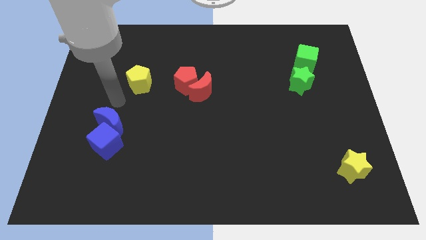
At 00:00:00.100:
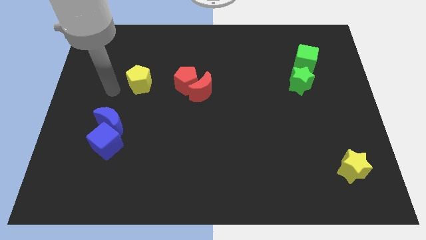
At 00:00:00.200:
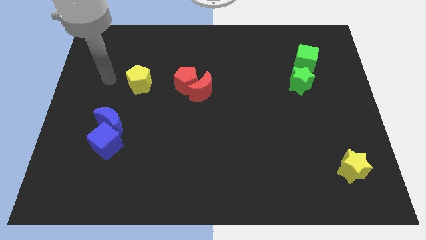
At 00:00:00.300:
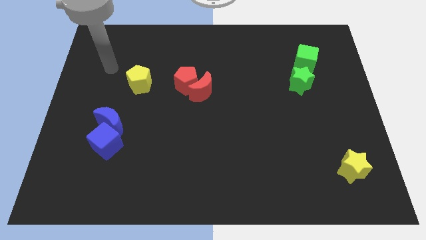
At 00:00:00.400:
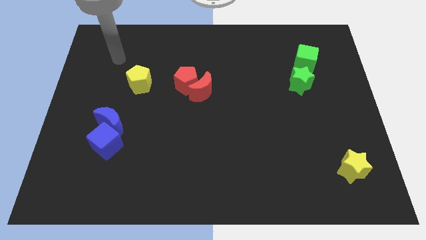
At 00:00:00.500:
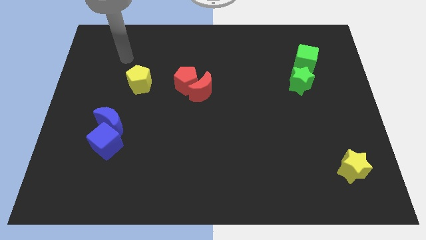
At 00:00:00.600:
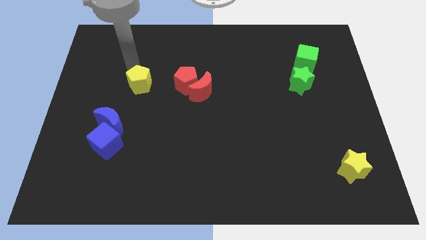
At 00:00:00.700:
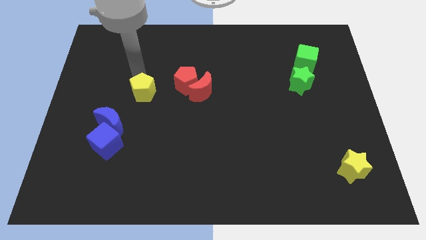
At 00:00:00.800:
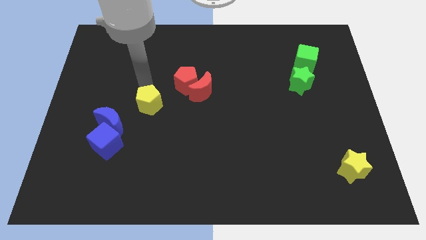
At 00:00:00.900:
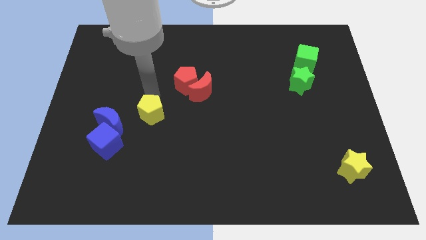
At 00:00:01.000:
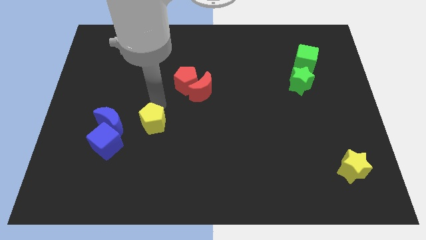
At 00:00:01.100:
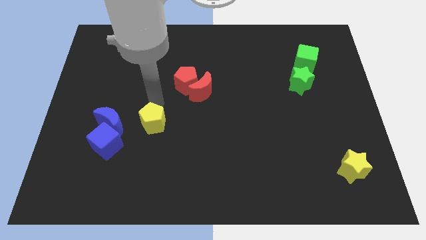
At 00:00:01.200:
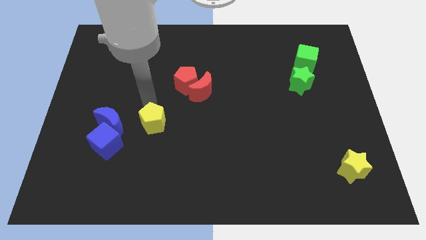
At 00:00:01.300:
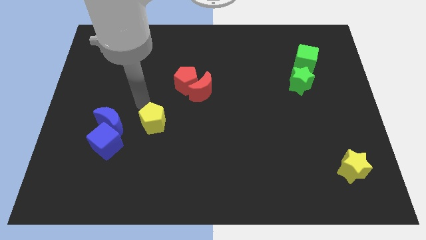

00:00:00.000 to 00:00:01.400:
place the yellow pentagon right to the blue moon

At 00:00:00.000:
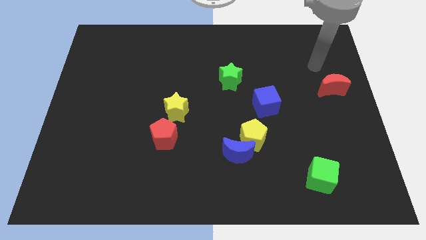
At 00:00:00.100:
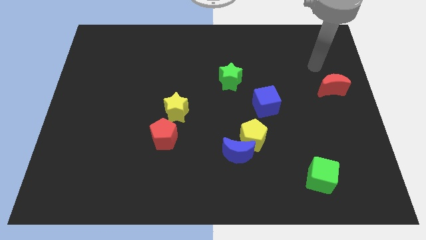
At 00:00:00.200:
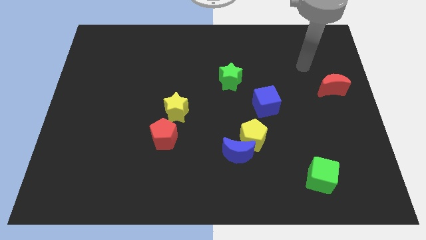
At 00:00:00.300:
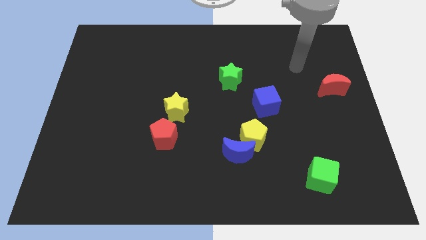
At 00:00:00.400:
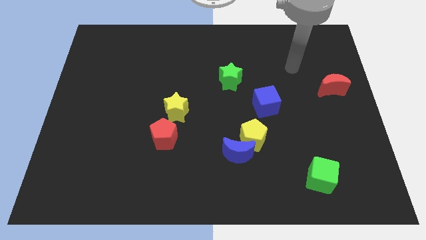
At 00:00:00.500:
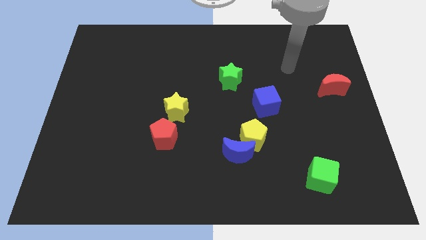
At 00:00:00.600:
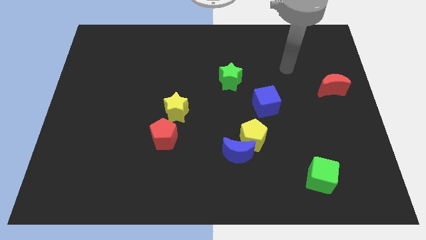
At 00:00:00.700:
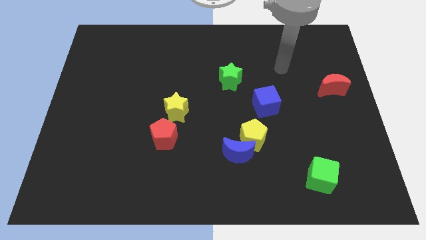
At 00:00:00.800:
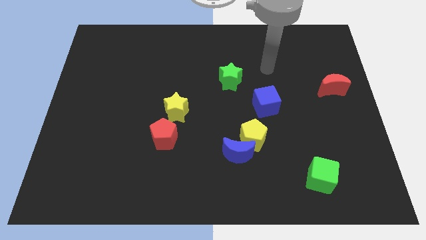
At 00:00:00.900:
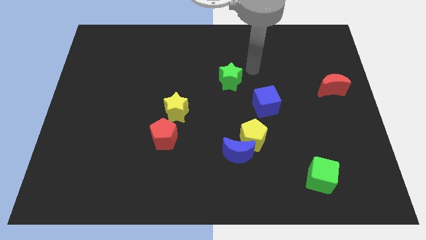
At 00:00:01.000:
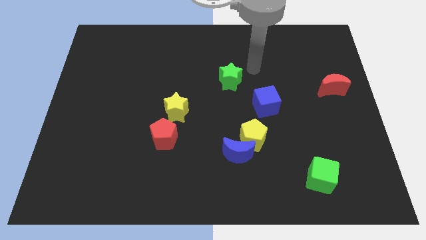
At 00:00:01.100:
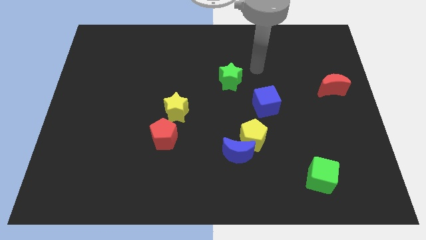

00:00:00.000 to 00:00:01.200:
point your arm to the top right side of the green star

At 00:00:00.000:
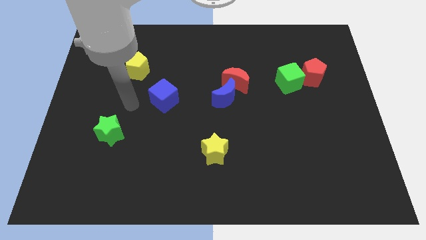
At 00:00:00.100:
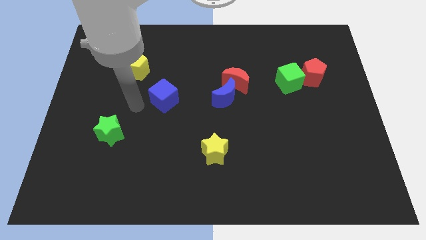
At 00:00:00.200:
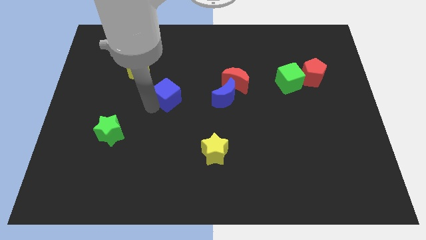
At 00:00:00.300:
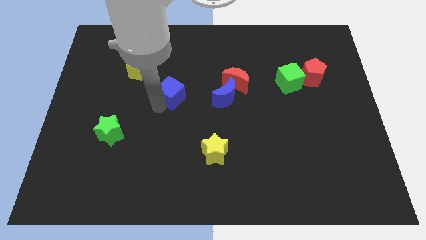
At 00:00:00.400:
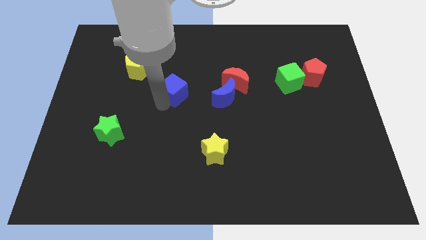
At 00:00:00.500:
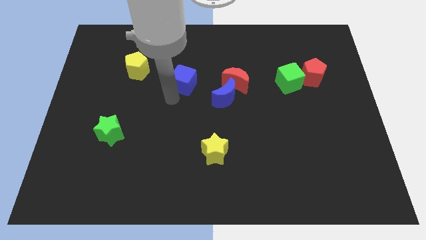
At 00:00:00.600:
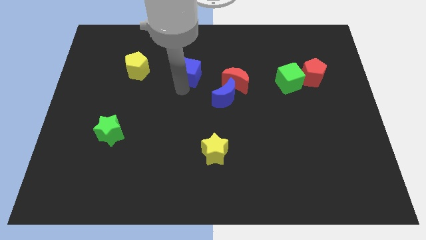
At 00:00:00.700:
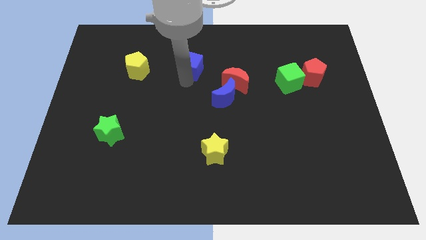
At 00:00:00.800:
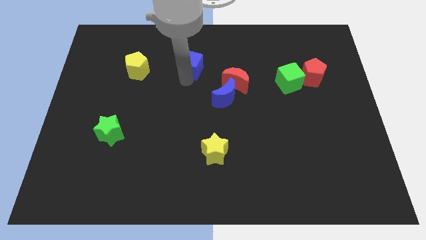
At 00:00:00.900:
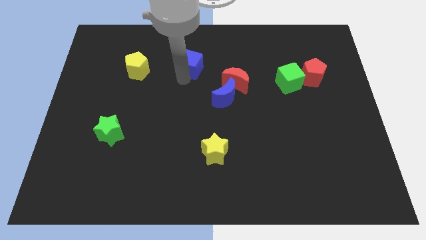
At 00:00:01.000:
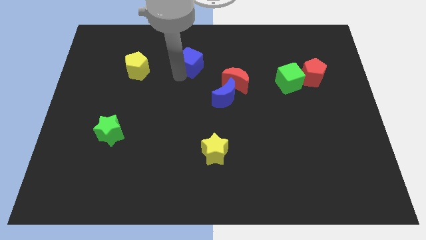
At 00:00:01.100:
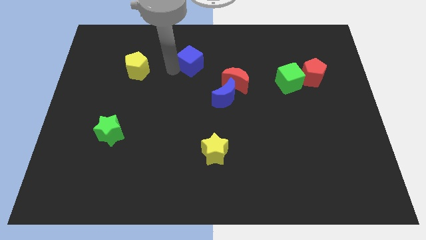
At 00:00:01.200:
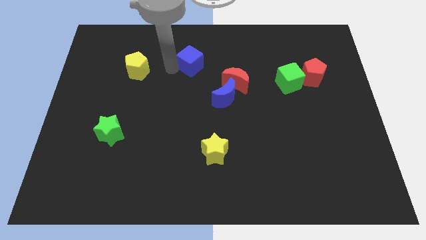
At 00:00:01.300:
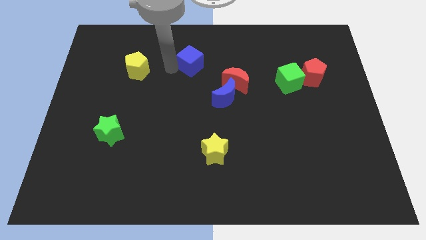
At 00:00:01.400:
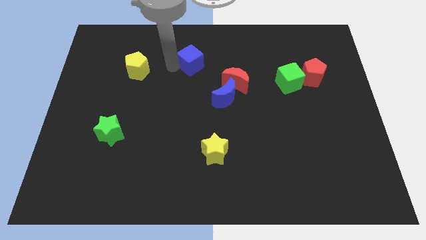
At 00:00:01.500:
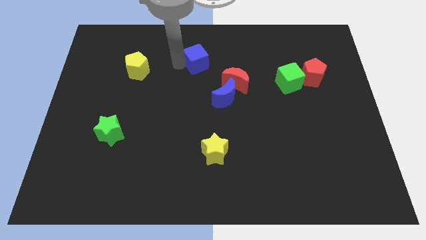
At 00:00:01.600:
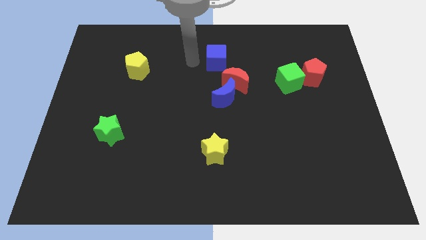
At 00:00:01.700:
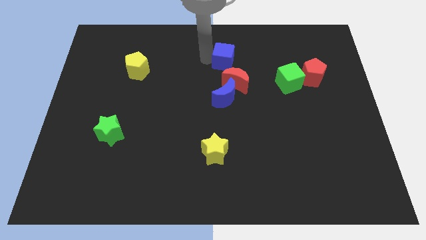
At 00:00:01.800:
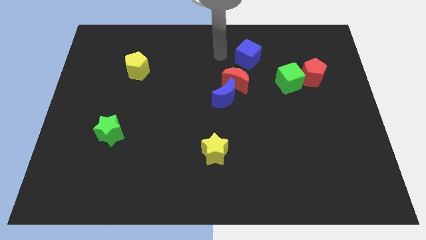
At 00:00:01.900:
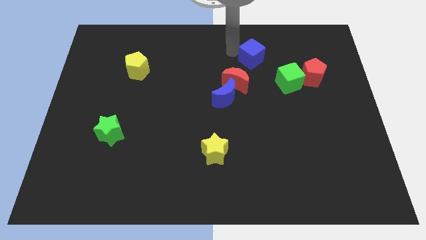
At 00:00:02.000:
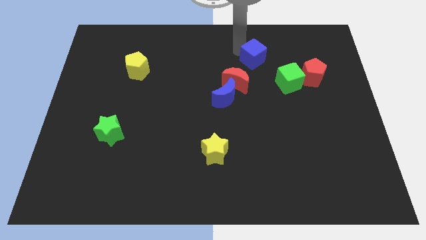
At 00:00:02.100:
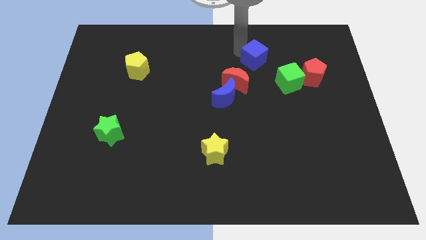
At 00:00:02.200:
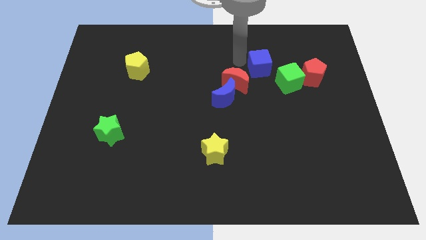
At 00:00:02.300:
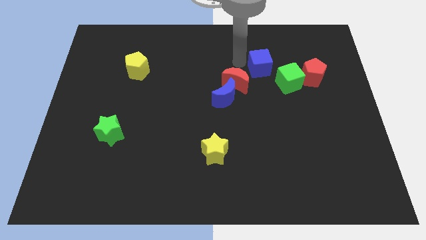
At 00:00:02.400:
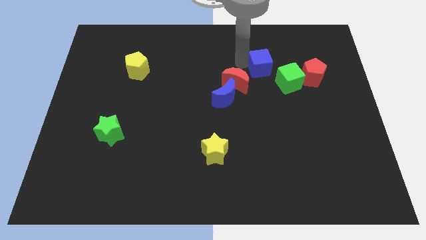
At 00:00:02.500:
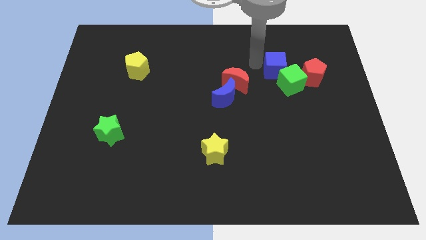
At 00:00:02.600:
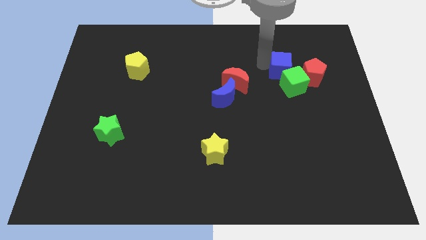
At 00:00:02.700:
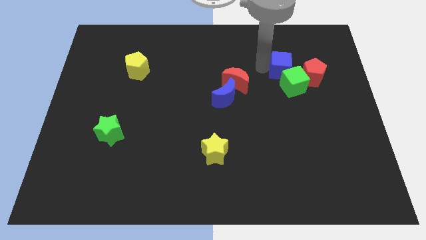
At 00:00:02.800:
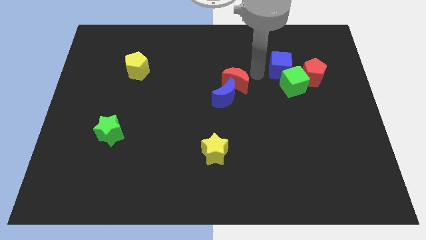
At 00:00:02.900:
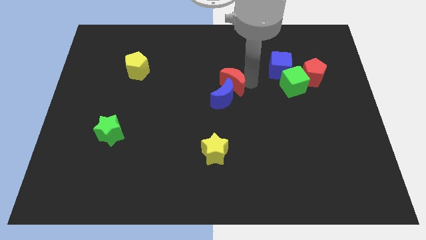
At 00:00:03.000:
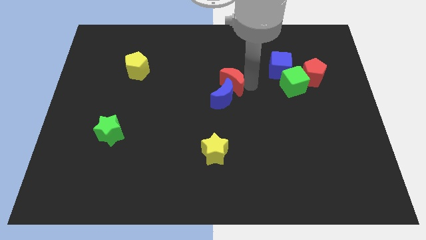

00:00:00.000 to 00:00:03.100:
push the blue cube into the green cube

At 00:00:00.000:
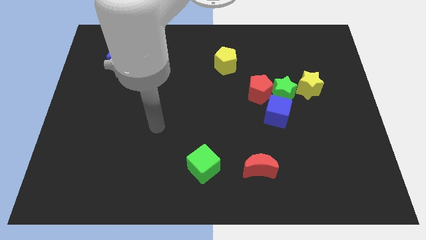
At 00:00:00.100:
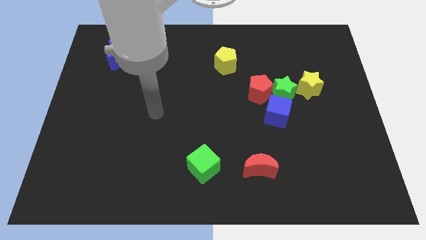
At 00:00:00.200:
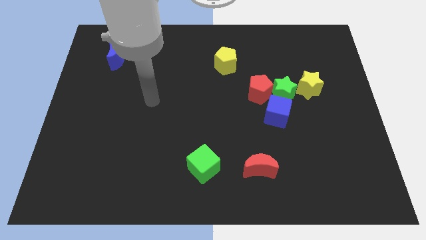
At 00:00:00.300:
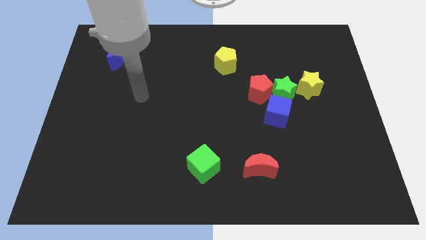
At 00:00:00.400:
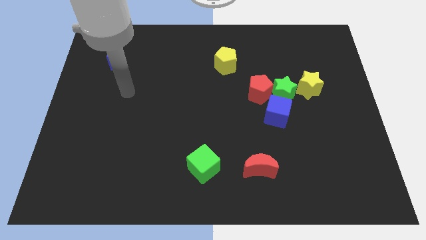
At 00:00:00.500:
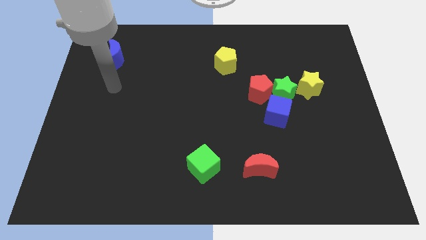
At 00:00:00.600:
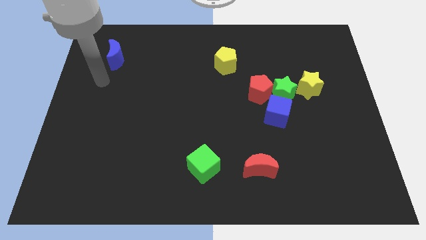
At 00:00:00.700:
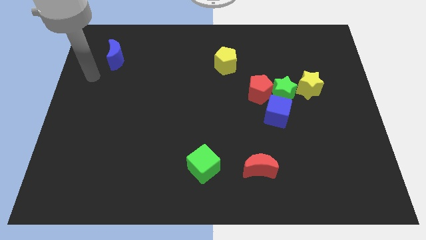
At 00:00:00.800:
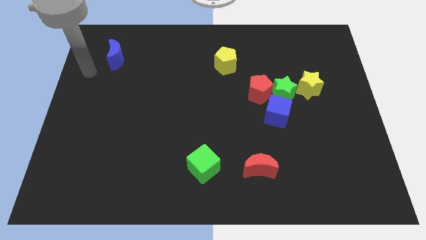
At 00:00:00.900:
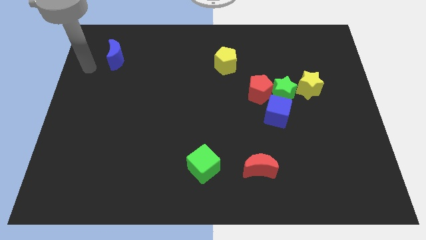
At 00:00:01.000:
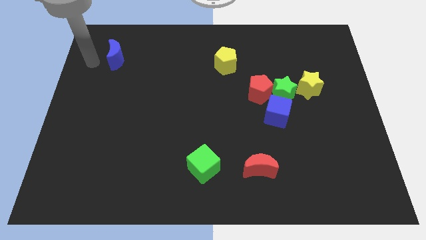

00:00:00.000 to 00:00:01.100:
move arm towards the blue crescent in the left top of the board

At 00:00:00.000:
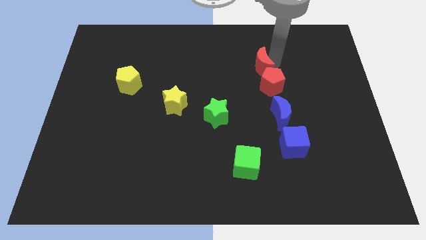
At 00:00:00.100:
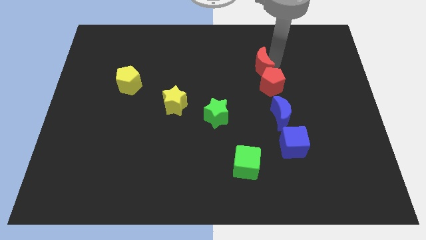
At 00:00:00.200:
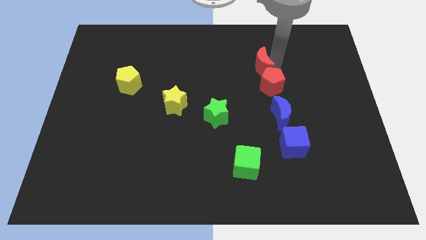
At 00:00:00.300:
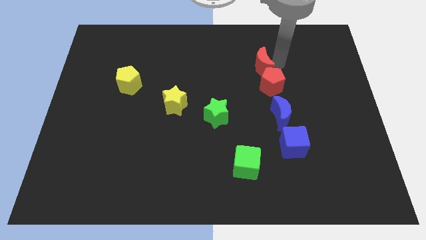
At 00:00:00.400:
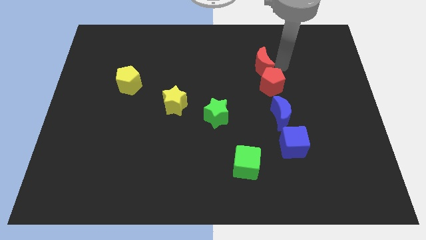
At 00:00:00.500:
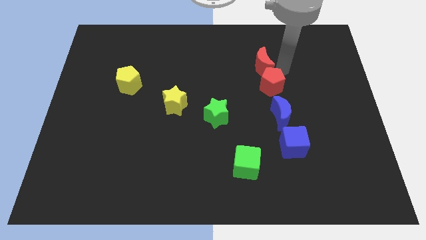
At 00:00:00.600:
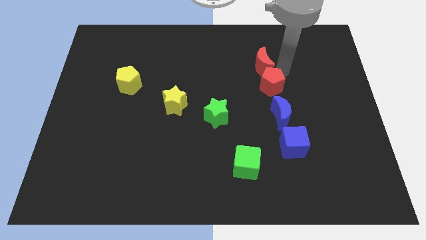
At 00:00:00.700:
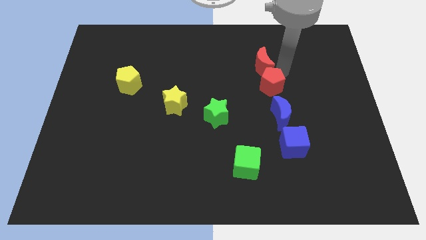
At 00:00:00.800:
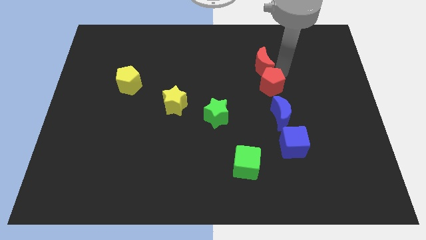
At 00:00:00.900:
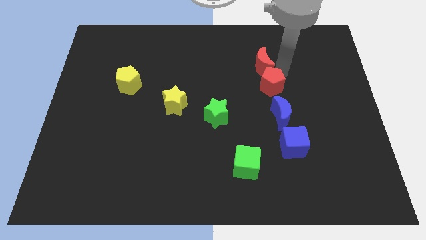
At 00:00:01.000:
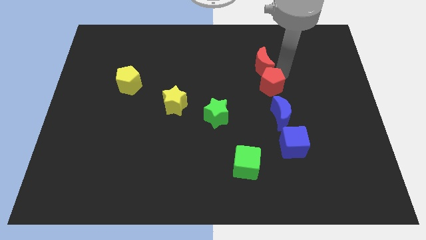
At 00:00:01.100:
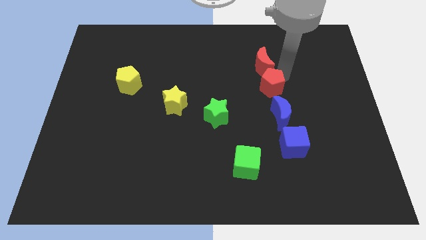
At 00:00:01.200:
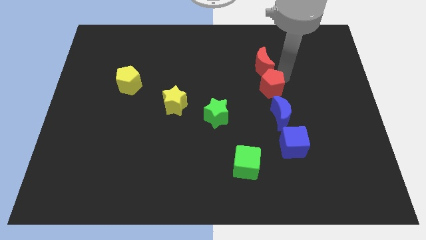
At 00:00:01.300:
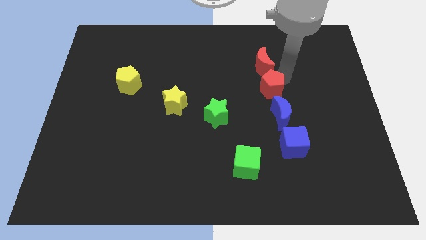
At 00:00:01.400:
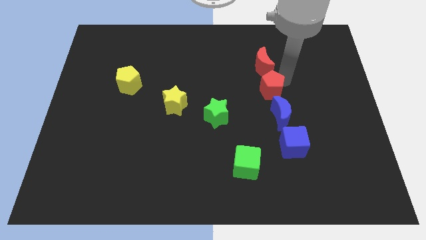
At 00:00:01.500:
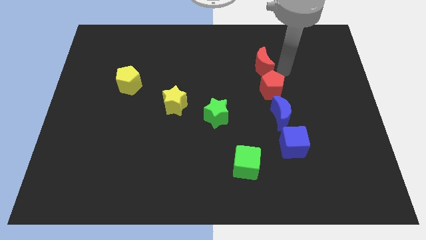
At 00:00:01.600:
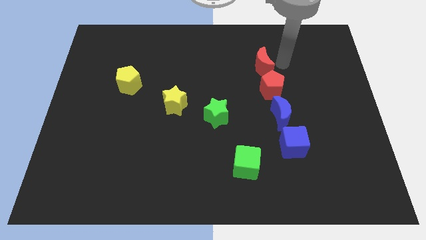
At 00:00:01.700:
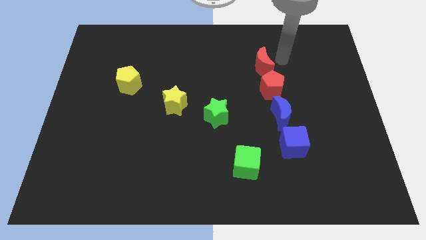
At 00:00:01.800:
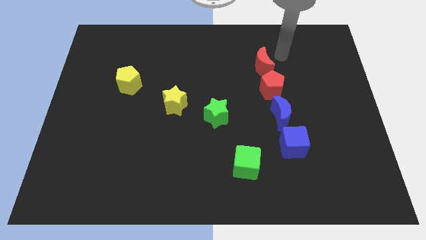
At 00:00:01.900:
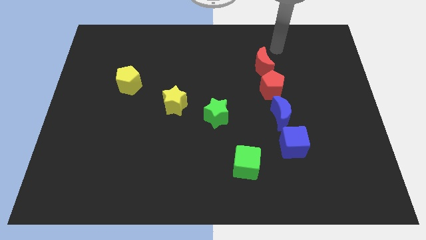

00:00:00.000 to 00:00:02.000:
move red pentagon slightly down
